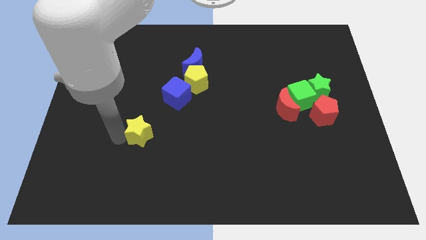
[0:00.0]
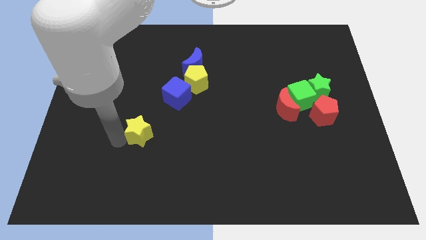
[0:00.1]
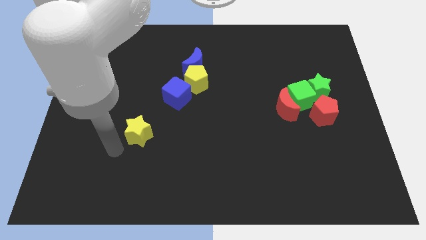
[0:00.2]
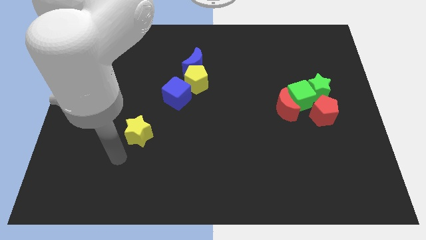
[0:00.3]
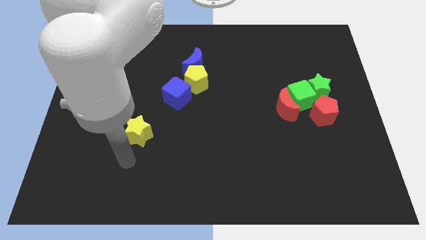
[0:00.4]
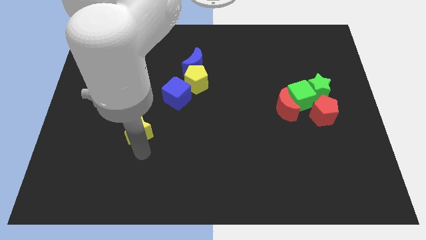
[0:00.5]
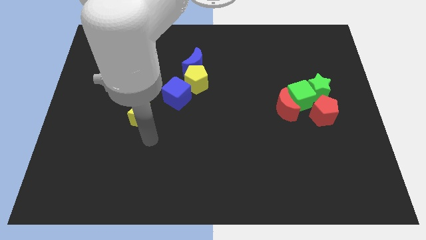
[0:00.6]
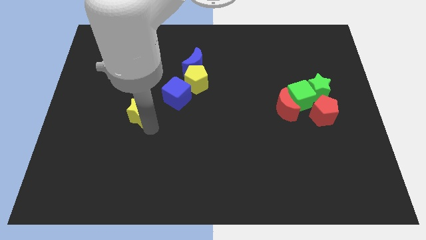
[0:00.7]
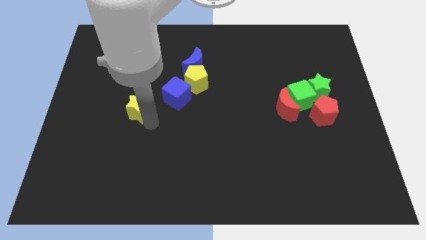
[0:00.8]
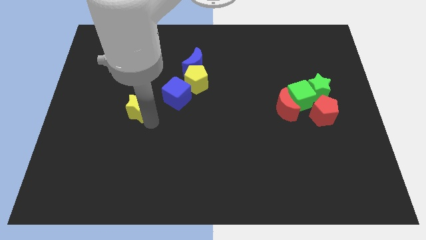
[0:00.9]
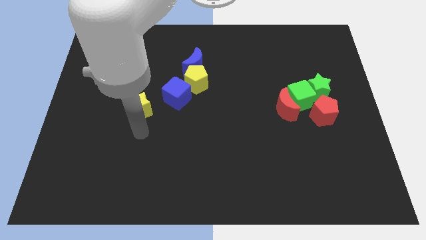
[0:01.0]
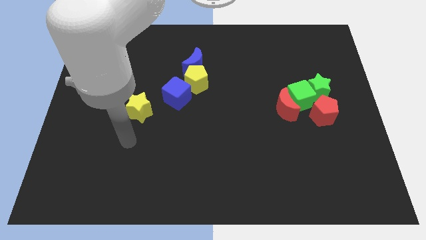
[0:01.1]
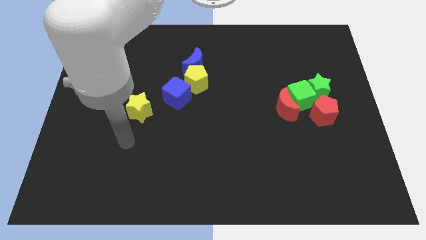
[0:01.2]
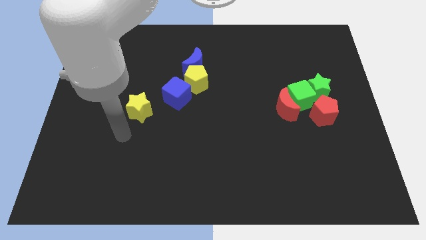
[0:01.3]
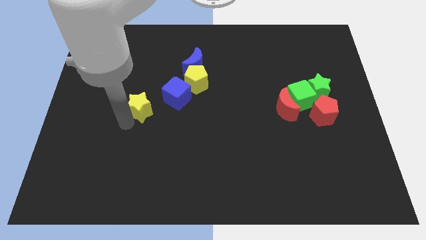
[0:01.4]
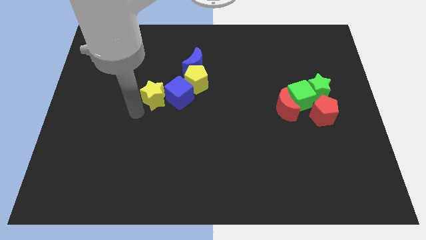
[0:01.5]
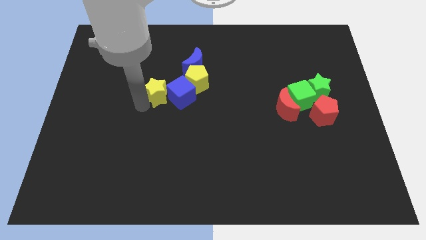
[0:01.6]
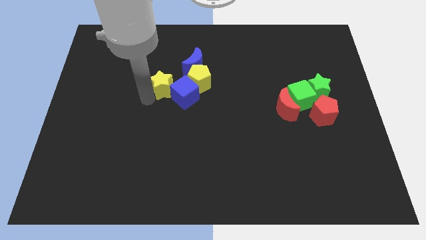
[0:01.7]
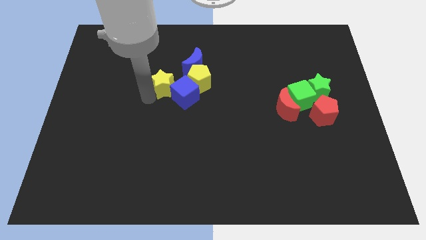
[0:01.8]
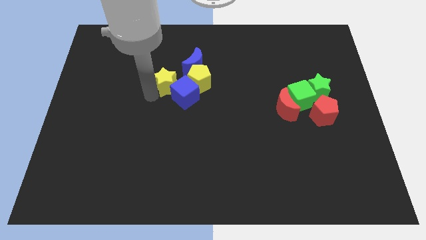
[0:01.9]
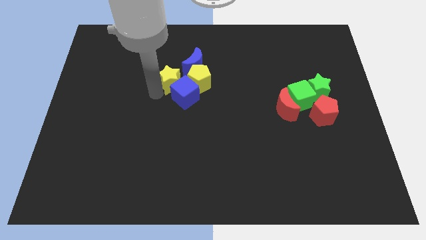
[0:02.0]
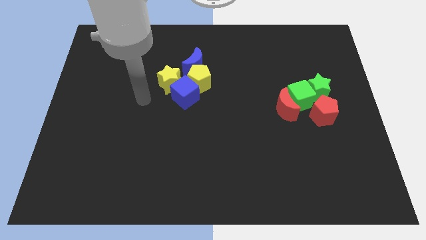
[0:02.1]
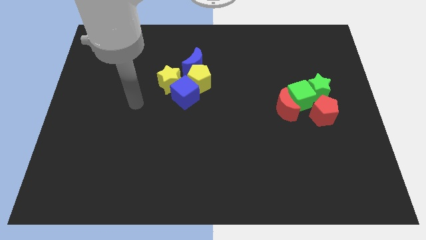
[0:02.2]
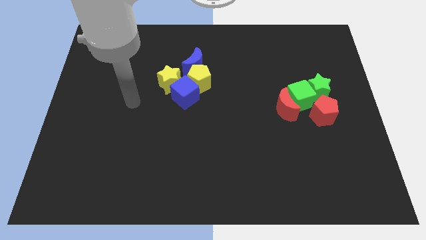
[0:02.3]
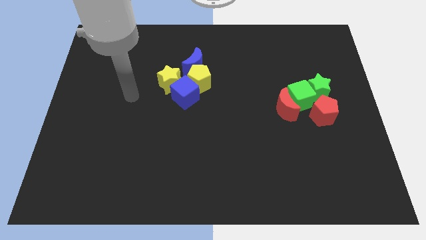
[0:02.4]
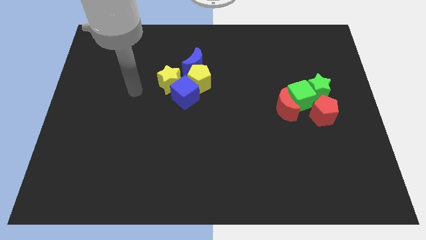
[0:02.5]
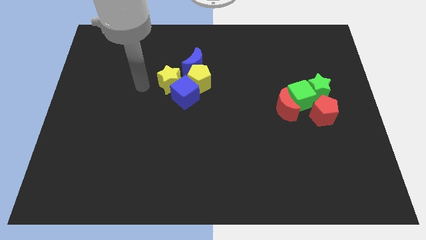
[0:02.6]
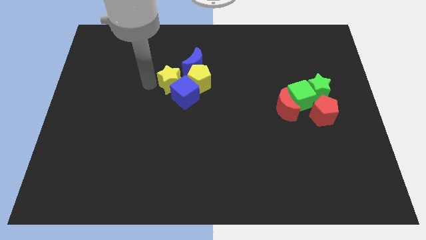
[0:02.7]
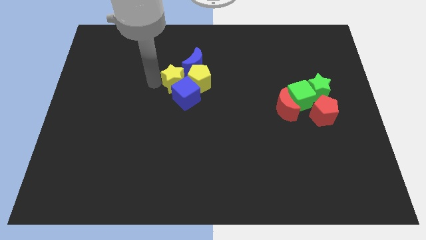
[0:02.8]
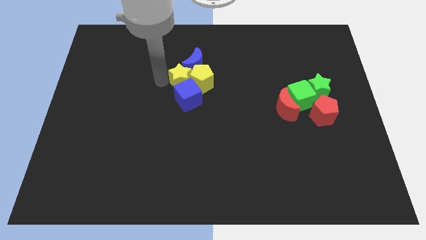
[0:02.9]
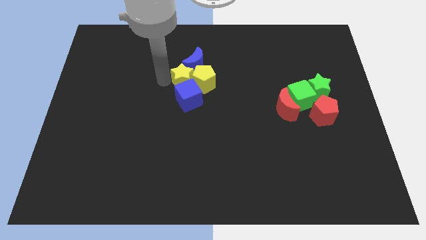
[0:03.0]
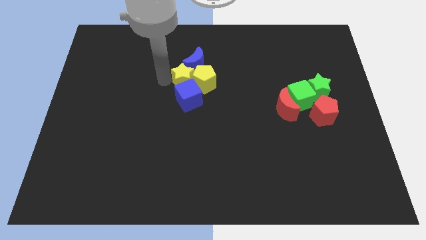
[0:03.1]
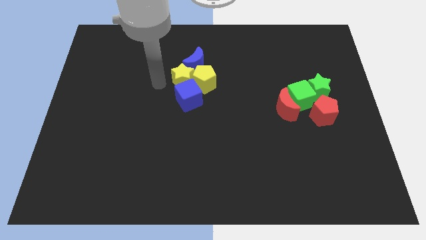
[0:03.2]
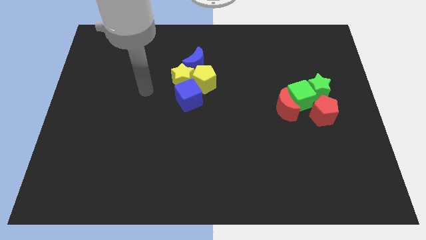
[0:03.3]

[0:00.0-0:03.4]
place the yellow star left to the yellow pentagon

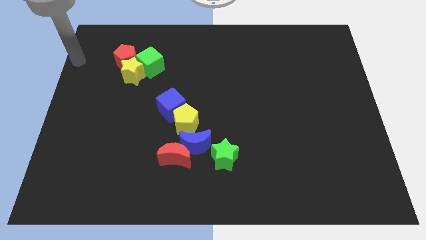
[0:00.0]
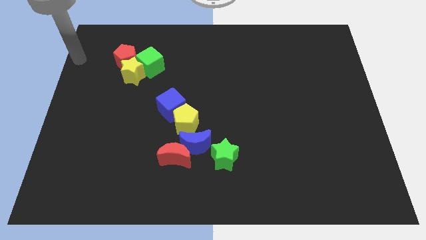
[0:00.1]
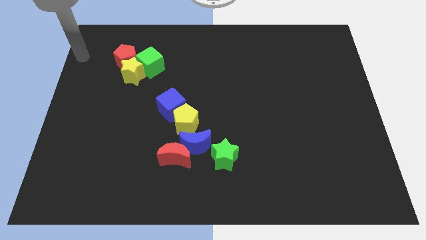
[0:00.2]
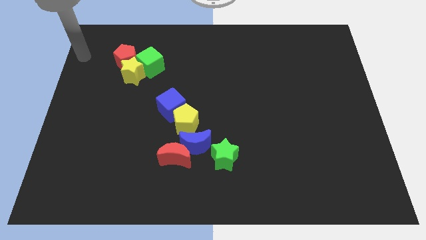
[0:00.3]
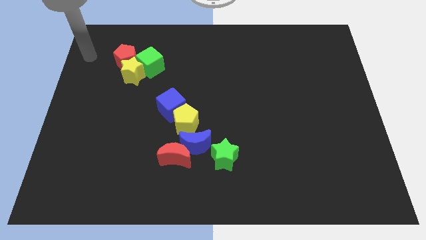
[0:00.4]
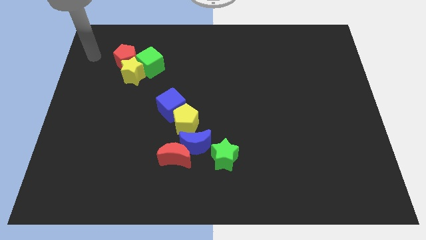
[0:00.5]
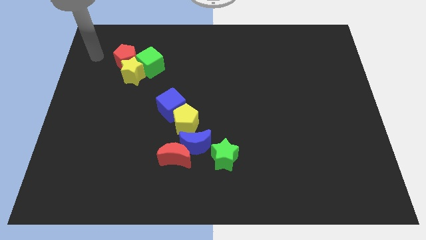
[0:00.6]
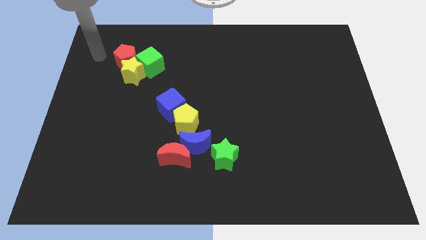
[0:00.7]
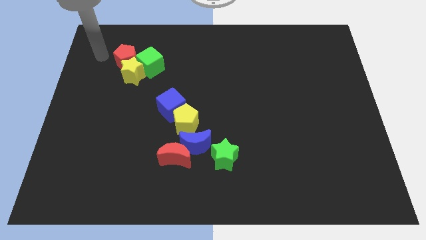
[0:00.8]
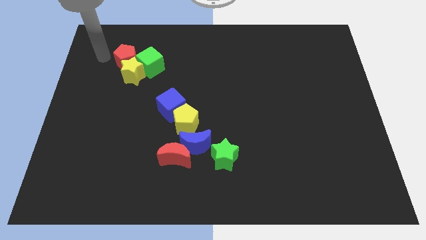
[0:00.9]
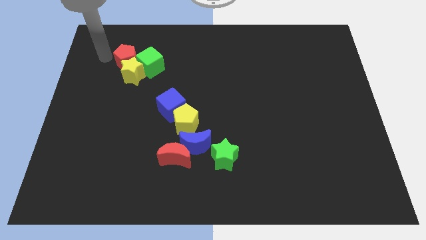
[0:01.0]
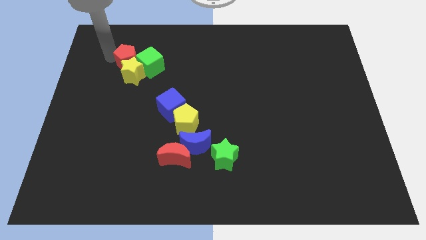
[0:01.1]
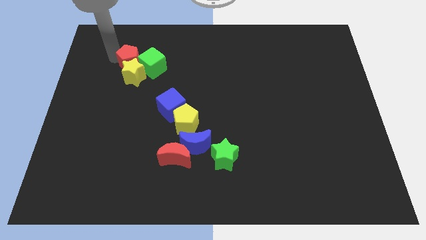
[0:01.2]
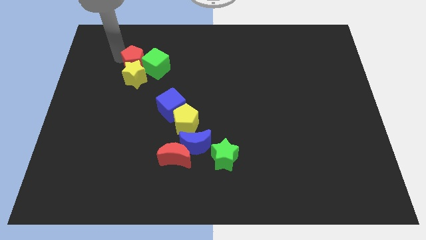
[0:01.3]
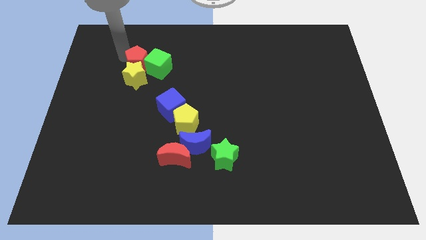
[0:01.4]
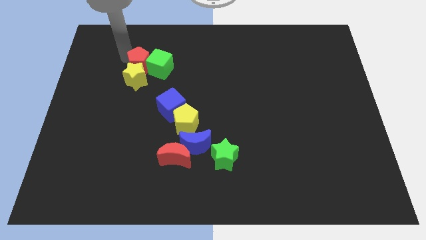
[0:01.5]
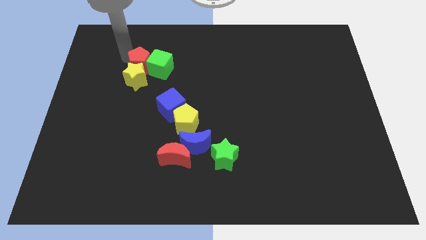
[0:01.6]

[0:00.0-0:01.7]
push the group of blocks towards down

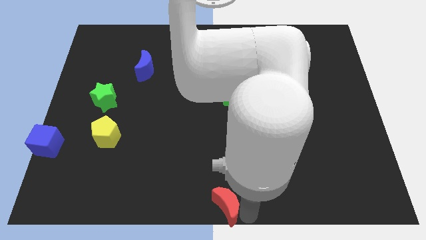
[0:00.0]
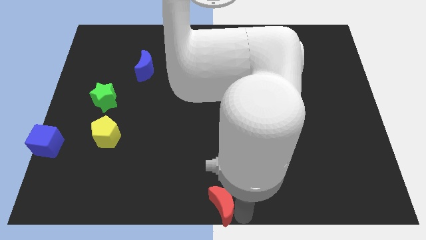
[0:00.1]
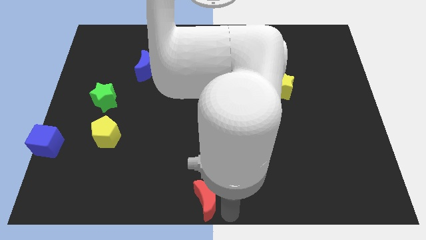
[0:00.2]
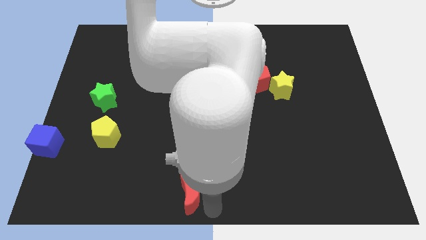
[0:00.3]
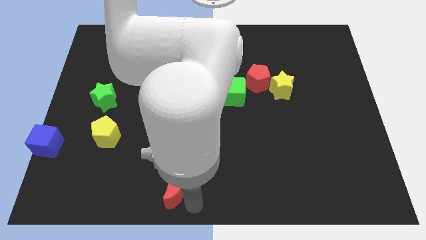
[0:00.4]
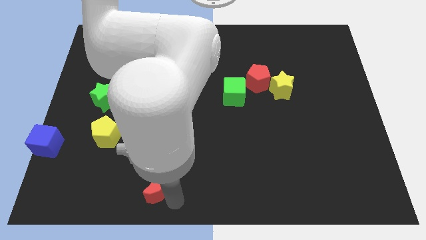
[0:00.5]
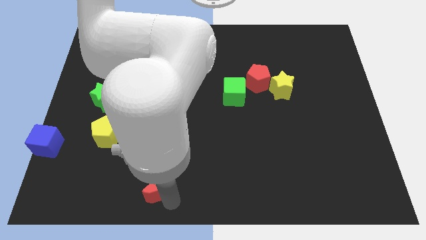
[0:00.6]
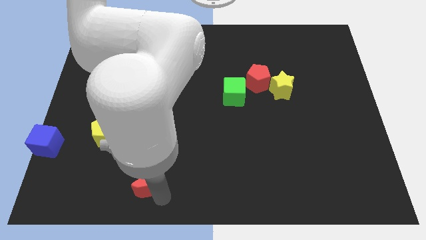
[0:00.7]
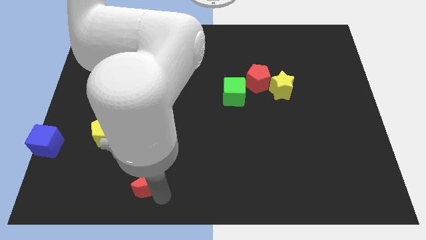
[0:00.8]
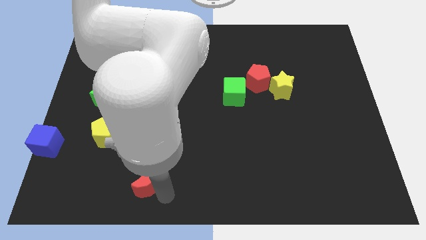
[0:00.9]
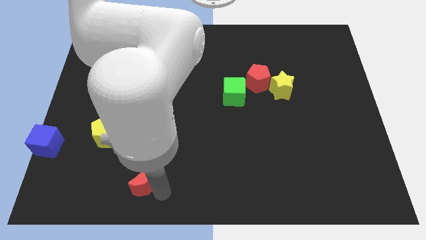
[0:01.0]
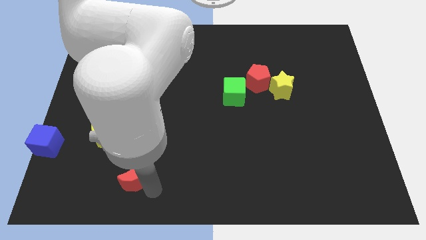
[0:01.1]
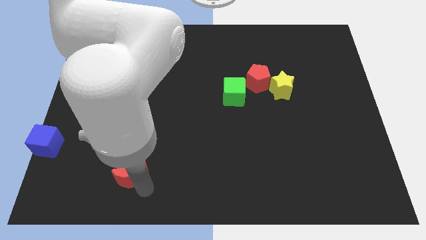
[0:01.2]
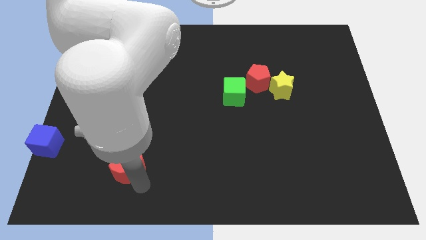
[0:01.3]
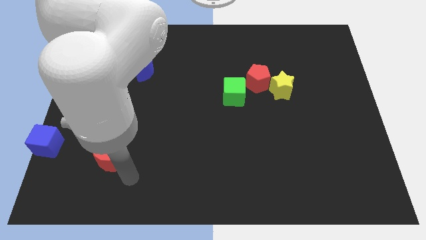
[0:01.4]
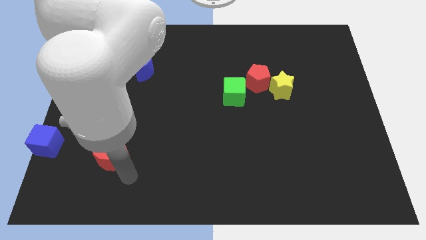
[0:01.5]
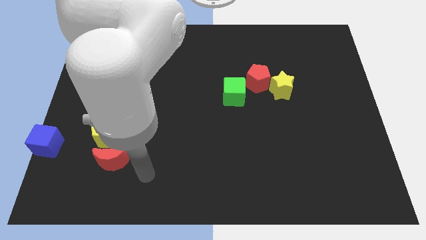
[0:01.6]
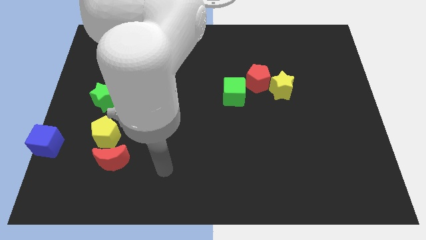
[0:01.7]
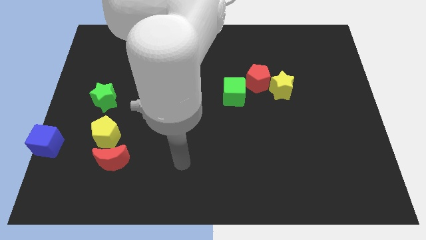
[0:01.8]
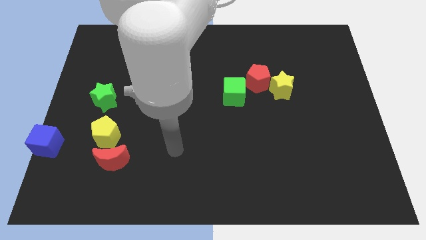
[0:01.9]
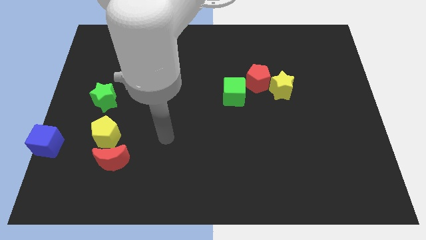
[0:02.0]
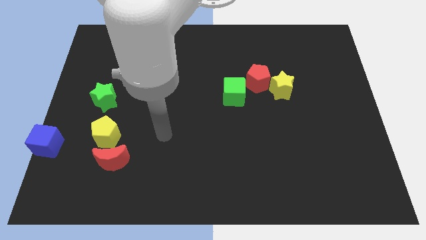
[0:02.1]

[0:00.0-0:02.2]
place the red crescent below the yellow pentagon

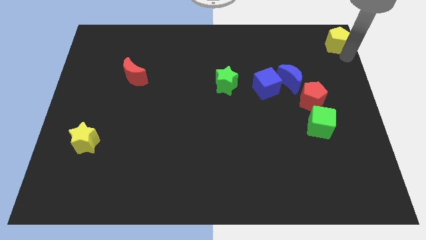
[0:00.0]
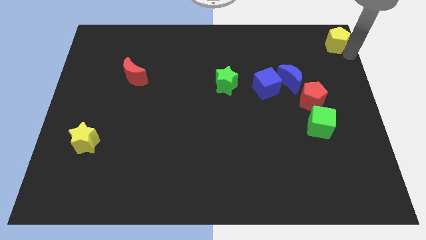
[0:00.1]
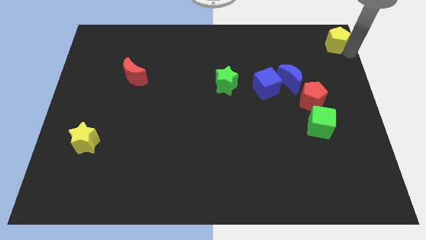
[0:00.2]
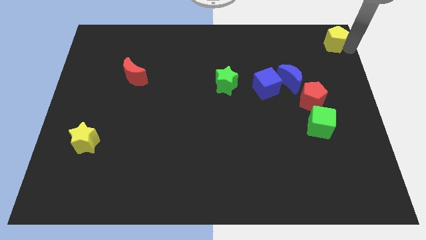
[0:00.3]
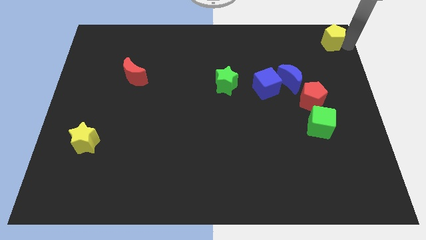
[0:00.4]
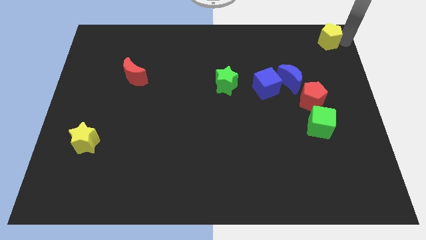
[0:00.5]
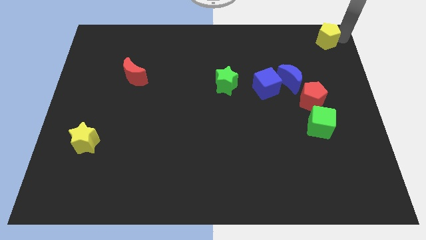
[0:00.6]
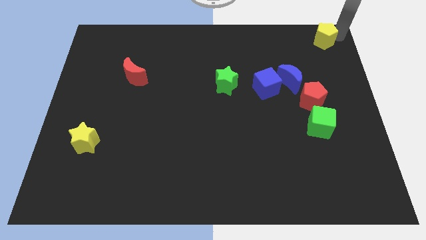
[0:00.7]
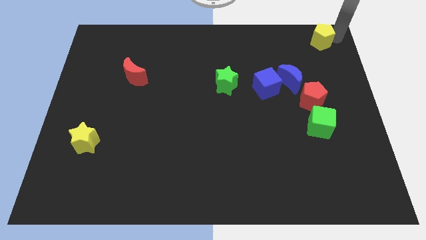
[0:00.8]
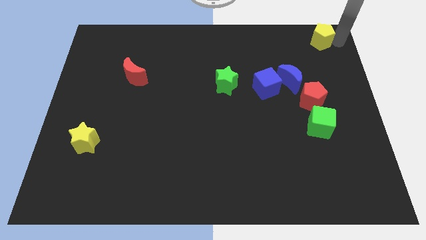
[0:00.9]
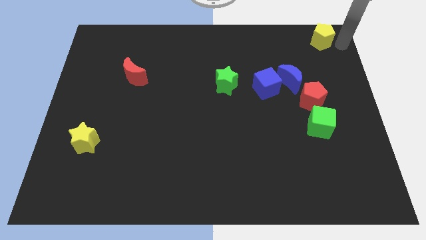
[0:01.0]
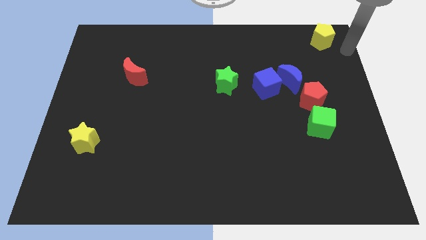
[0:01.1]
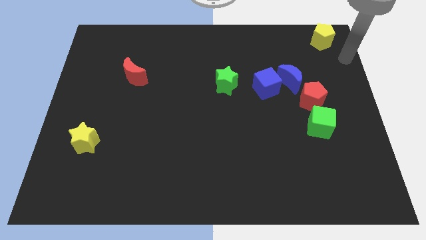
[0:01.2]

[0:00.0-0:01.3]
move yellow pentagon towards its left
